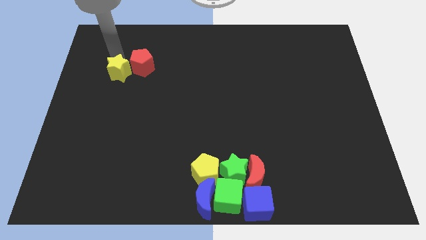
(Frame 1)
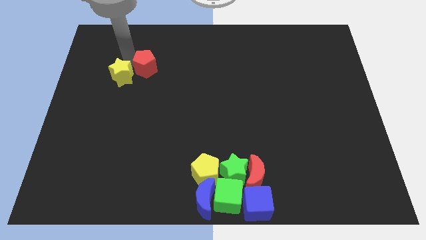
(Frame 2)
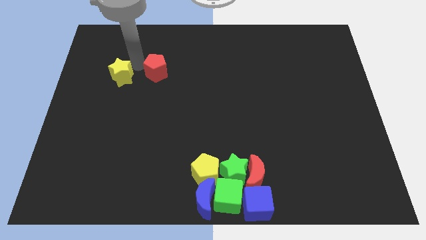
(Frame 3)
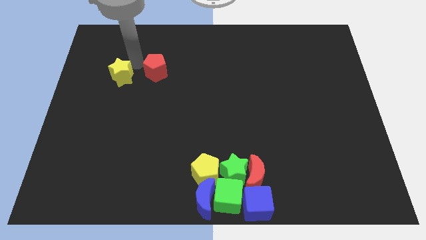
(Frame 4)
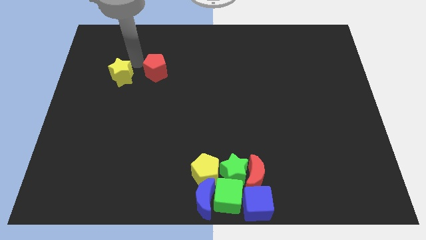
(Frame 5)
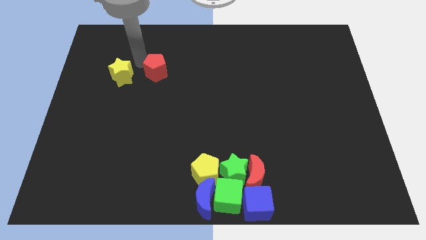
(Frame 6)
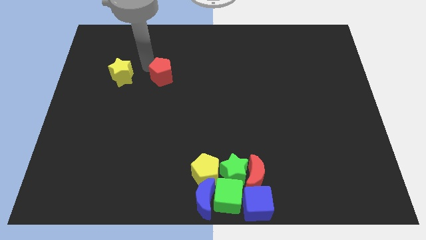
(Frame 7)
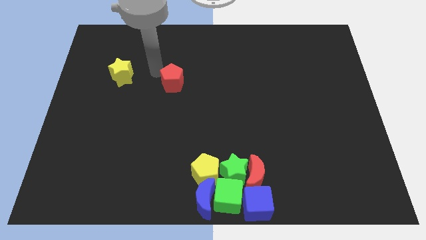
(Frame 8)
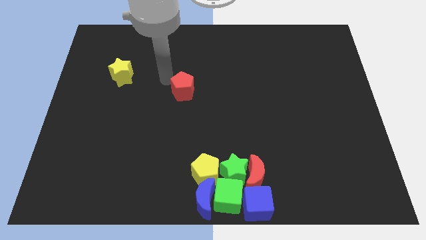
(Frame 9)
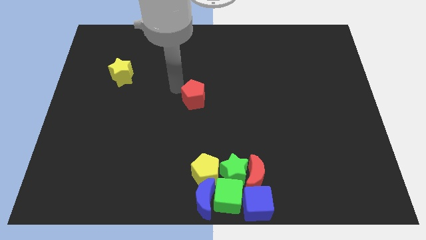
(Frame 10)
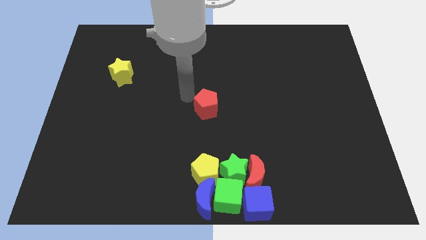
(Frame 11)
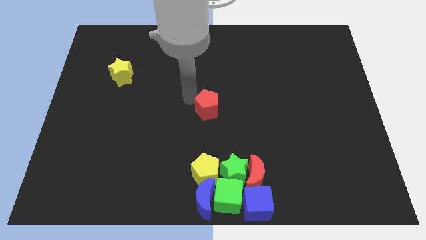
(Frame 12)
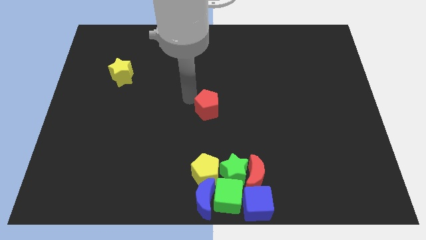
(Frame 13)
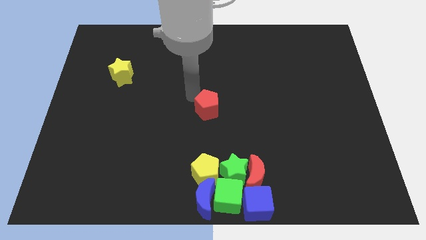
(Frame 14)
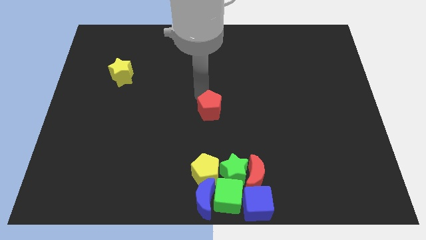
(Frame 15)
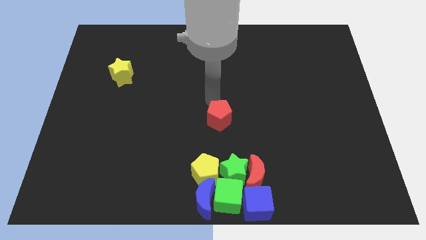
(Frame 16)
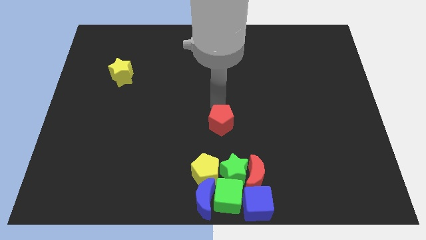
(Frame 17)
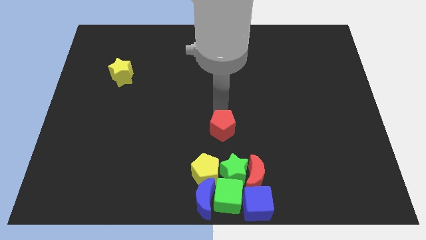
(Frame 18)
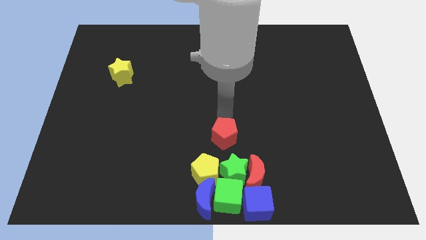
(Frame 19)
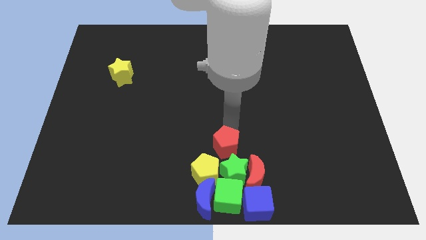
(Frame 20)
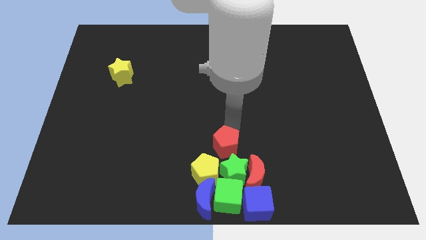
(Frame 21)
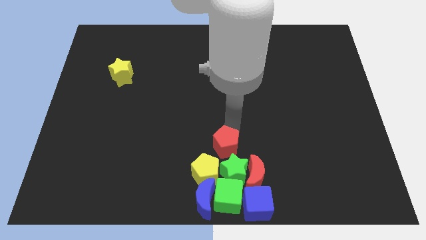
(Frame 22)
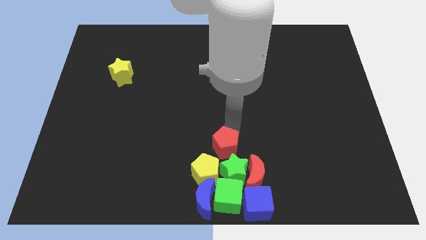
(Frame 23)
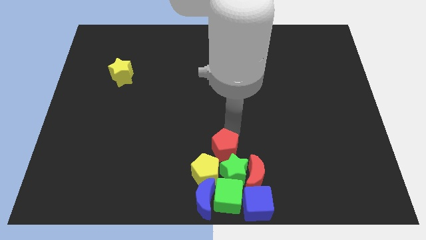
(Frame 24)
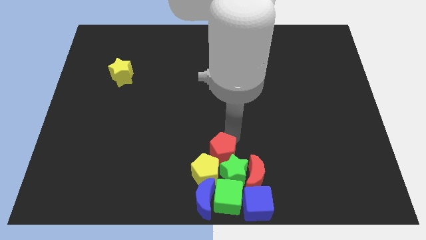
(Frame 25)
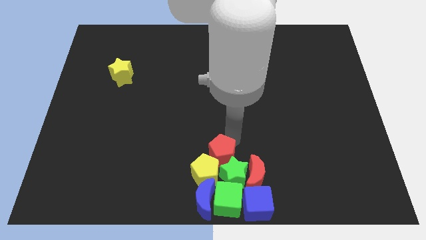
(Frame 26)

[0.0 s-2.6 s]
move the red pentagon at the center top of the yellow pentagon and green star

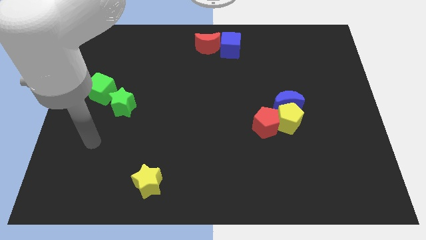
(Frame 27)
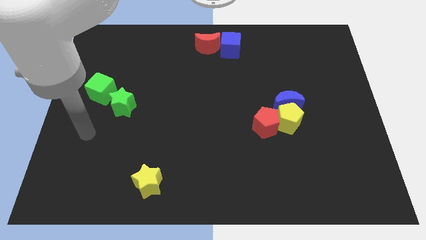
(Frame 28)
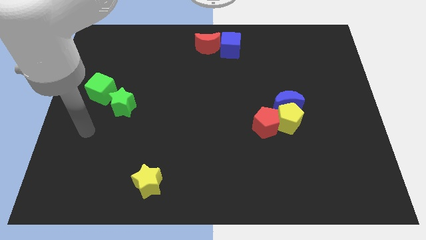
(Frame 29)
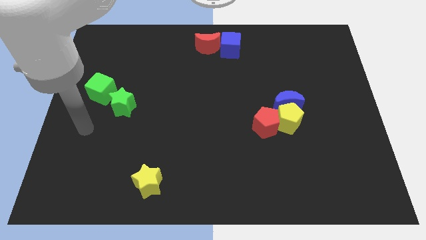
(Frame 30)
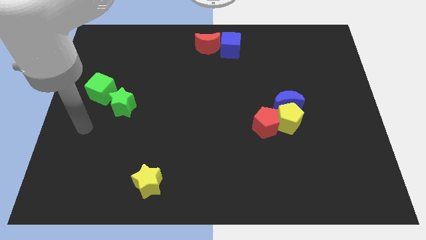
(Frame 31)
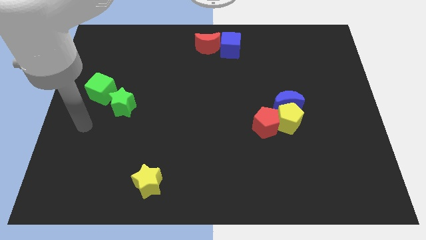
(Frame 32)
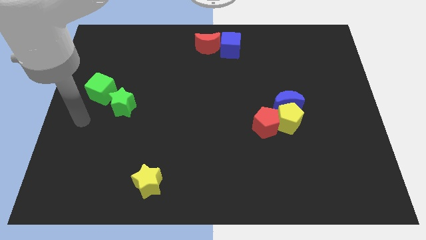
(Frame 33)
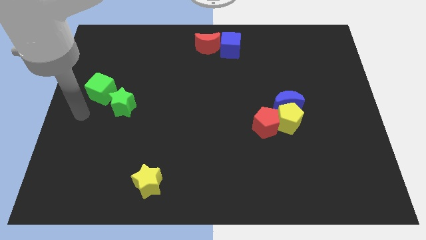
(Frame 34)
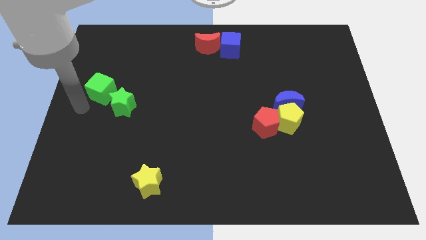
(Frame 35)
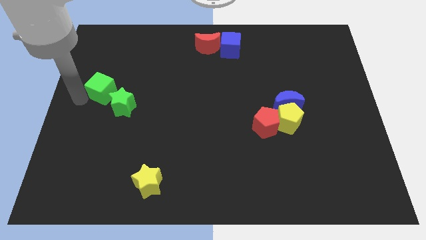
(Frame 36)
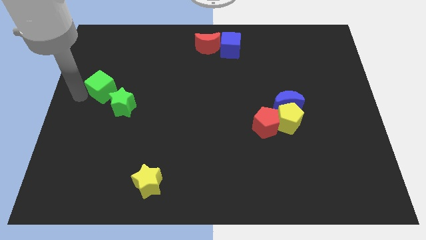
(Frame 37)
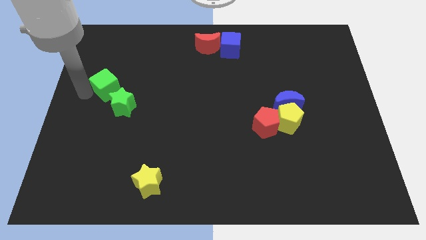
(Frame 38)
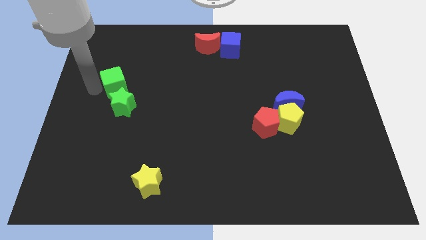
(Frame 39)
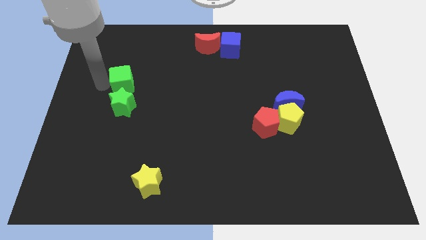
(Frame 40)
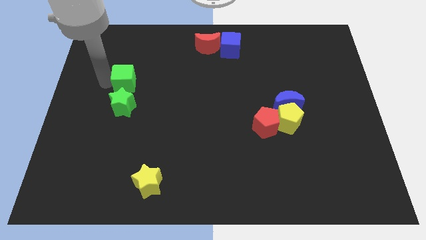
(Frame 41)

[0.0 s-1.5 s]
put the green cube at the top of the green star

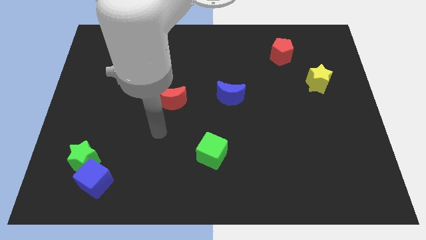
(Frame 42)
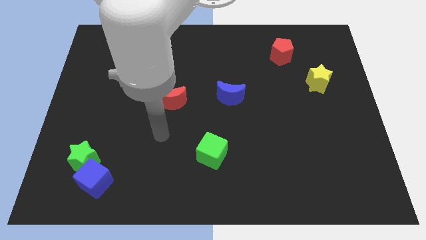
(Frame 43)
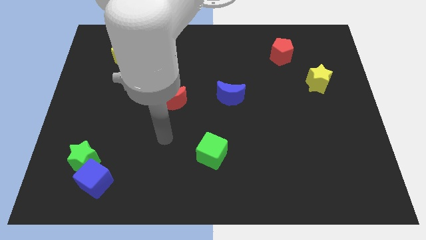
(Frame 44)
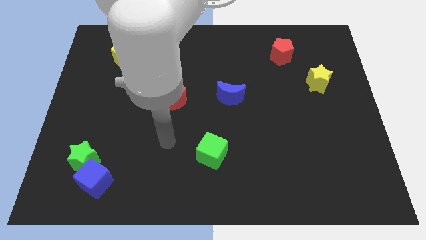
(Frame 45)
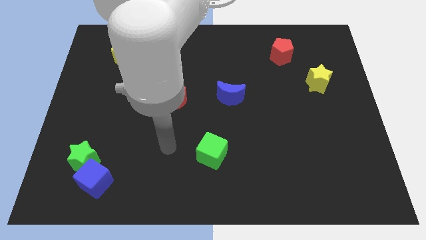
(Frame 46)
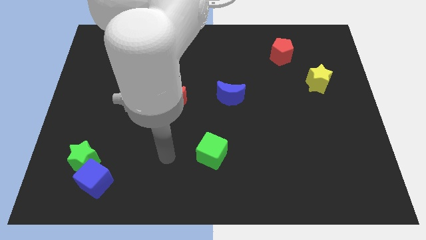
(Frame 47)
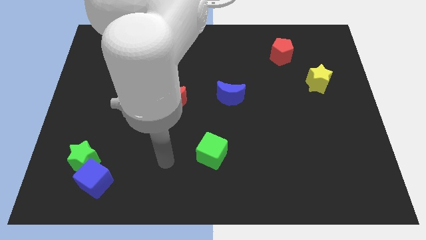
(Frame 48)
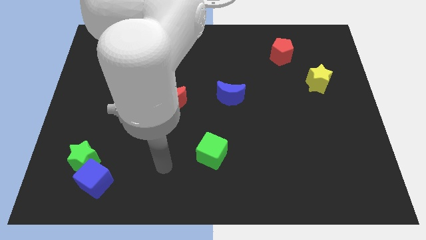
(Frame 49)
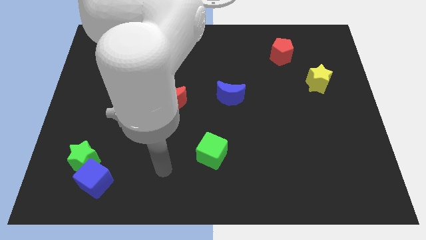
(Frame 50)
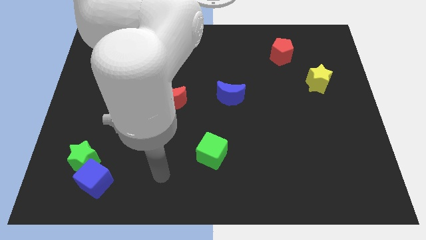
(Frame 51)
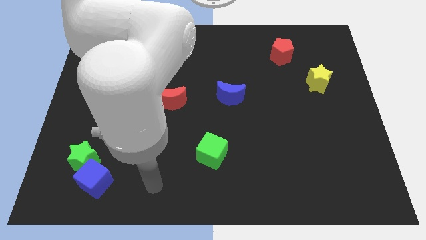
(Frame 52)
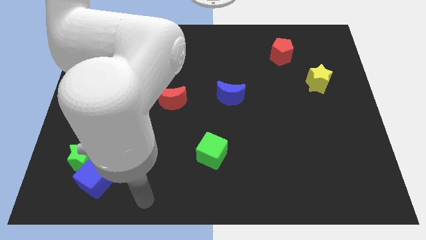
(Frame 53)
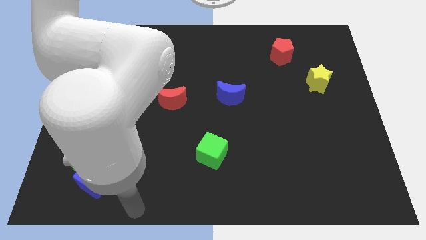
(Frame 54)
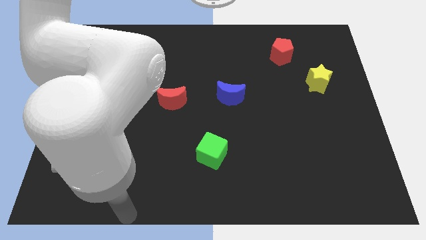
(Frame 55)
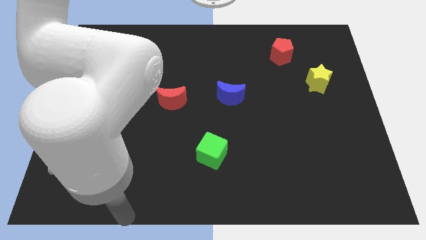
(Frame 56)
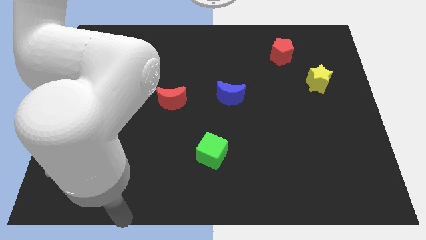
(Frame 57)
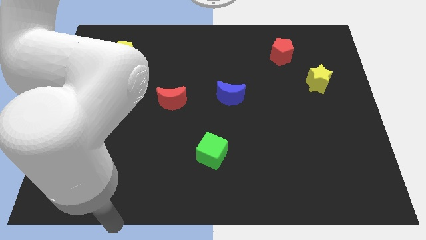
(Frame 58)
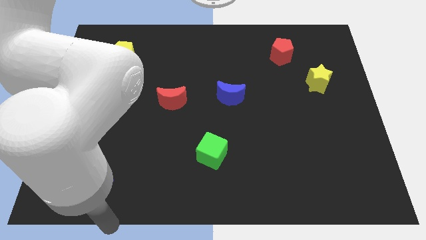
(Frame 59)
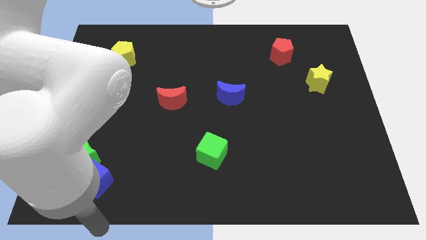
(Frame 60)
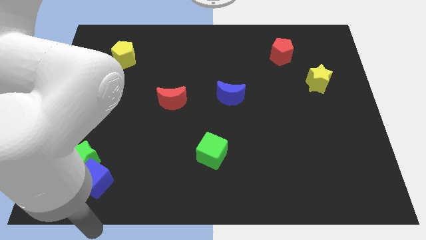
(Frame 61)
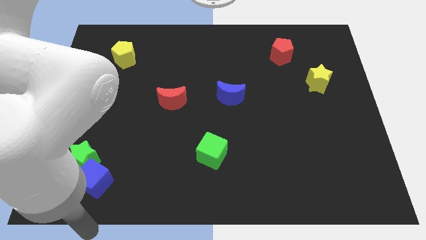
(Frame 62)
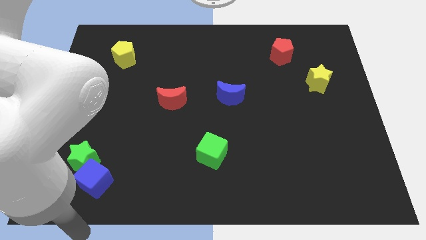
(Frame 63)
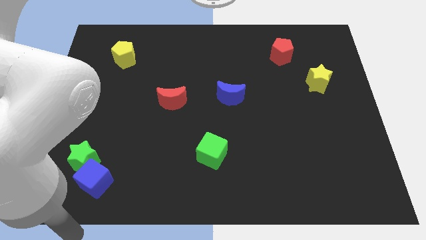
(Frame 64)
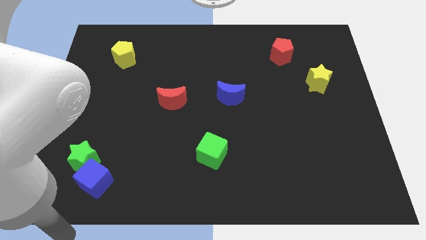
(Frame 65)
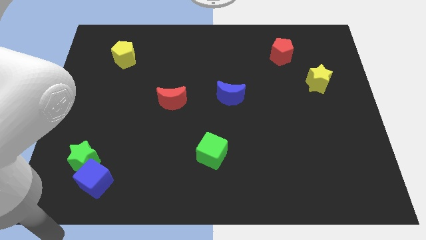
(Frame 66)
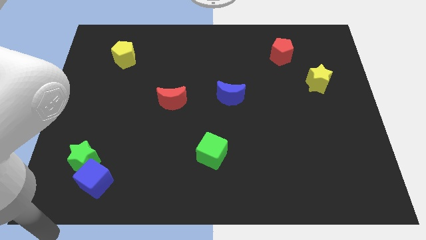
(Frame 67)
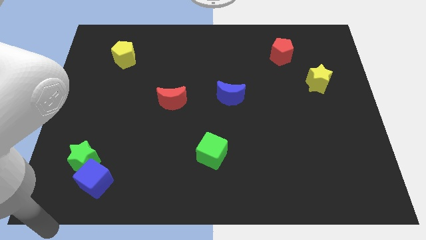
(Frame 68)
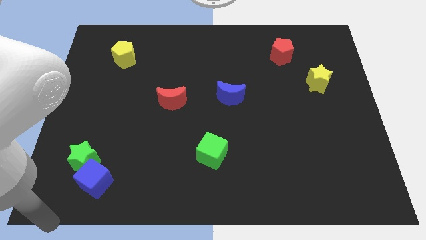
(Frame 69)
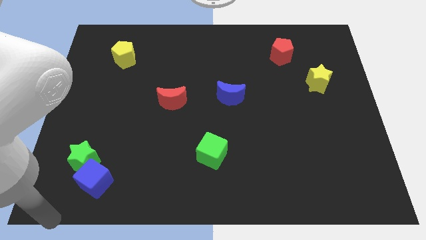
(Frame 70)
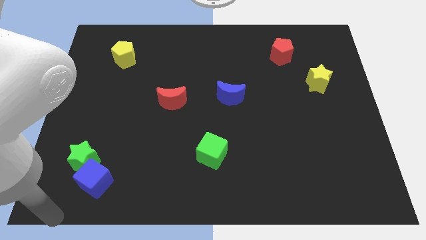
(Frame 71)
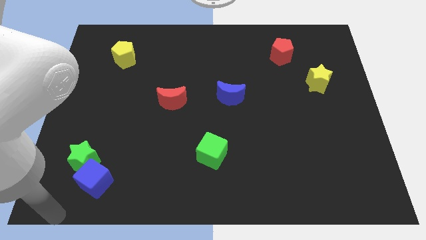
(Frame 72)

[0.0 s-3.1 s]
point your arm at the bottom left corner of the board

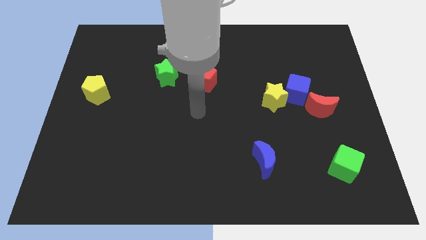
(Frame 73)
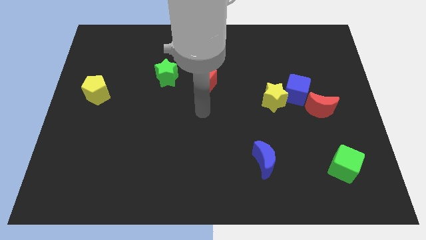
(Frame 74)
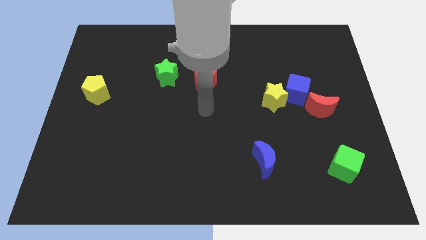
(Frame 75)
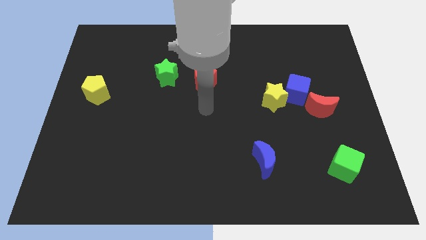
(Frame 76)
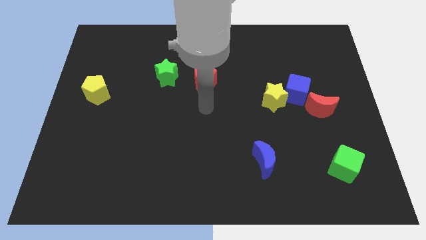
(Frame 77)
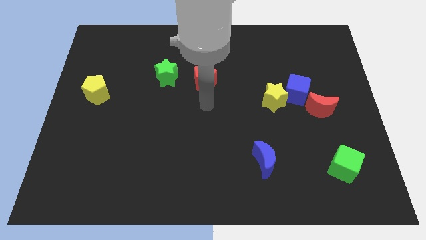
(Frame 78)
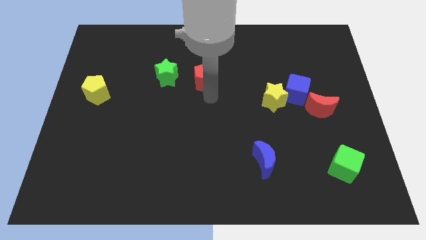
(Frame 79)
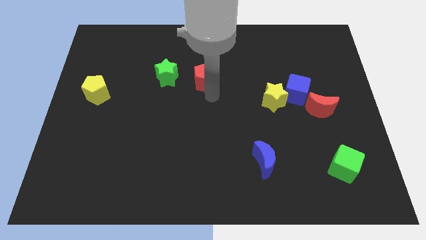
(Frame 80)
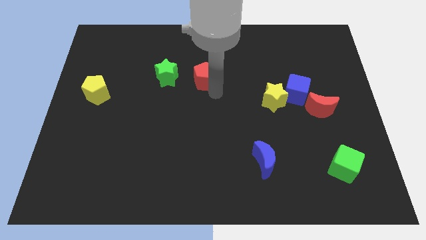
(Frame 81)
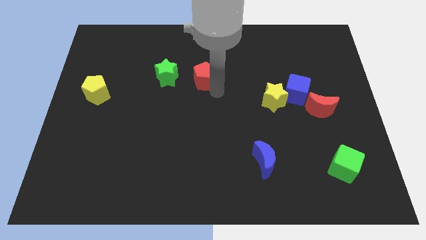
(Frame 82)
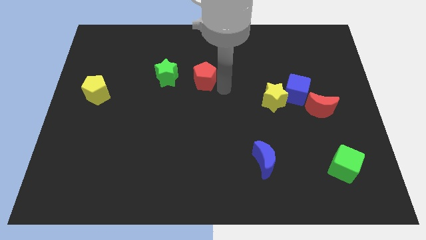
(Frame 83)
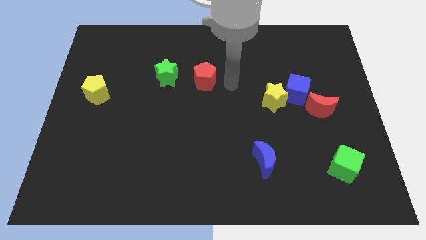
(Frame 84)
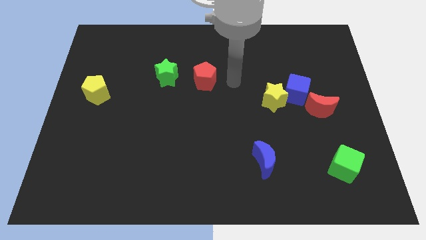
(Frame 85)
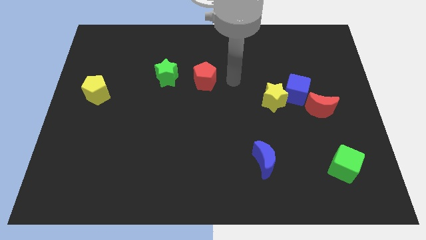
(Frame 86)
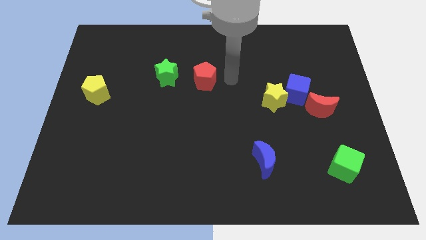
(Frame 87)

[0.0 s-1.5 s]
move the arm to the right side of the red pentagon

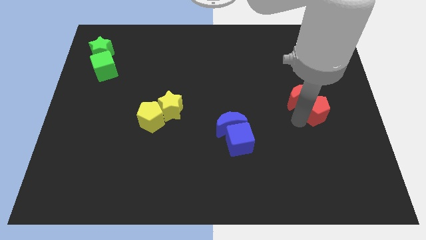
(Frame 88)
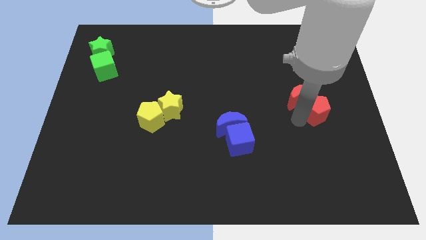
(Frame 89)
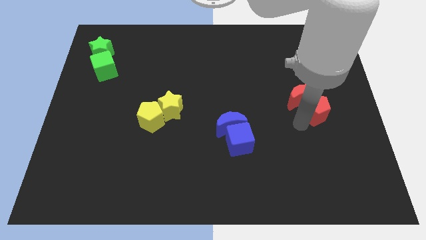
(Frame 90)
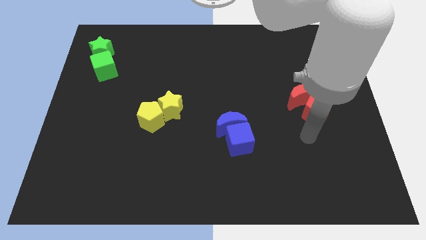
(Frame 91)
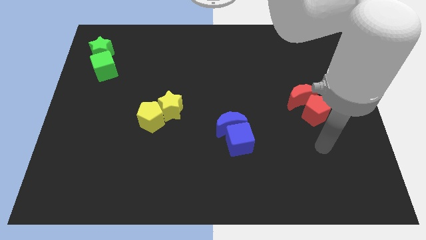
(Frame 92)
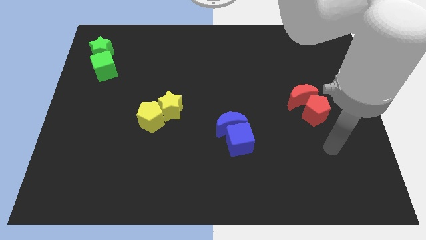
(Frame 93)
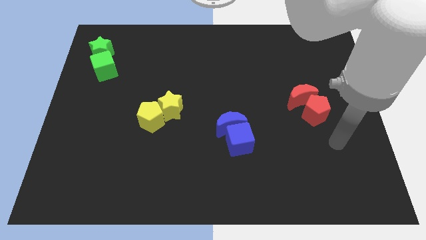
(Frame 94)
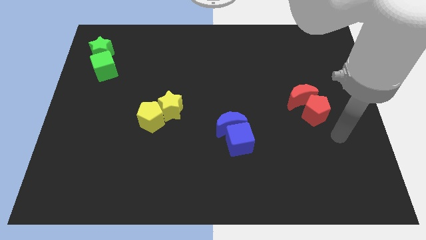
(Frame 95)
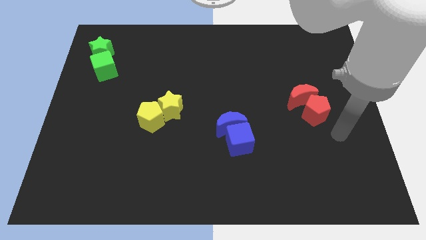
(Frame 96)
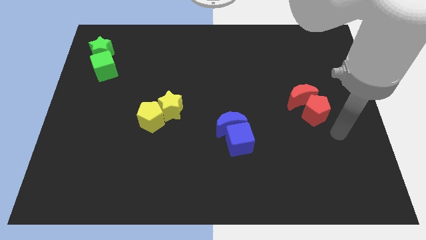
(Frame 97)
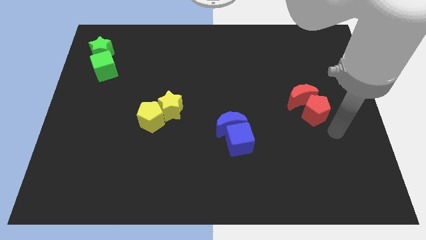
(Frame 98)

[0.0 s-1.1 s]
move the arm around the red blocks
